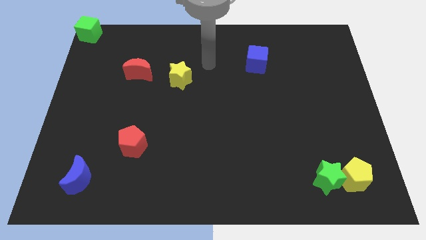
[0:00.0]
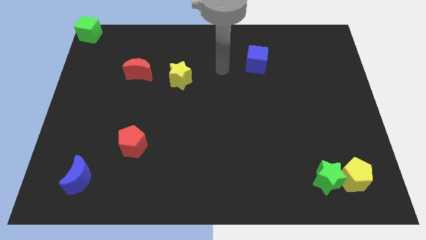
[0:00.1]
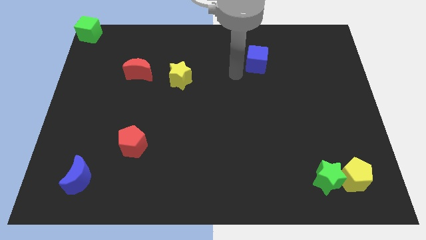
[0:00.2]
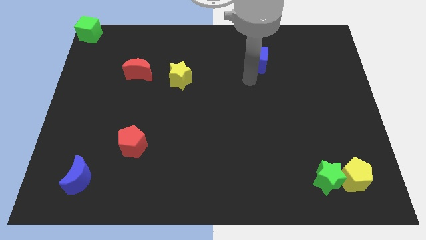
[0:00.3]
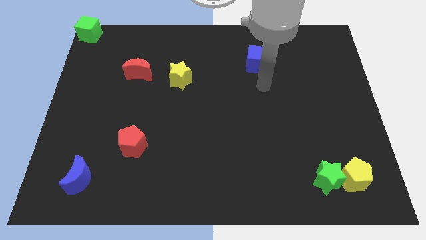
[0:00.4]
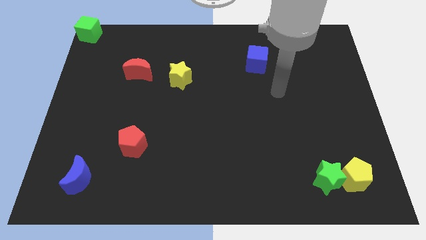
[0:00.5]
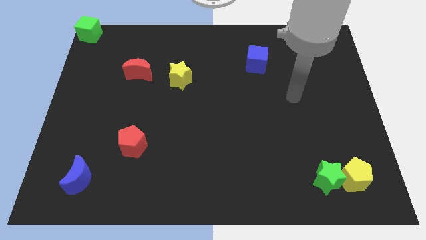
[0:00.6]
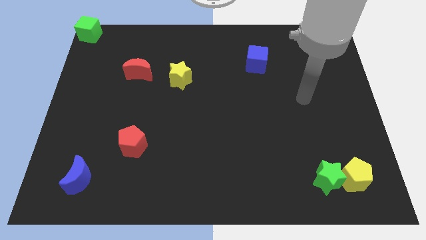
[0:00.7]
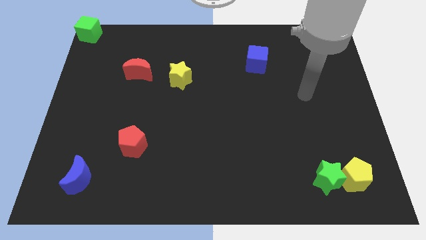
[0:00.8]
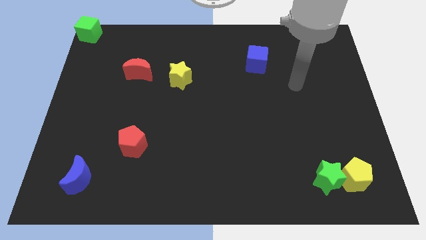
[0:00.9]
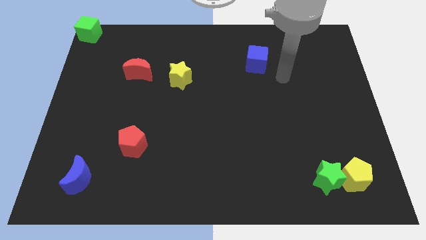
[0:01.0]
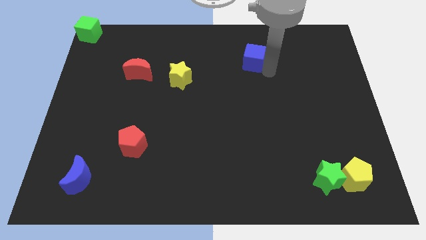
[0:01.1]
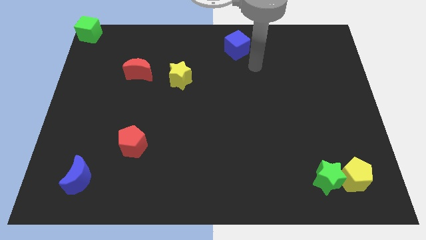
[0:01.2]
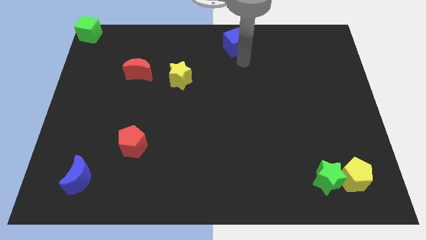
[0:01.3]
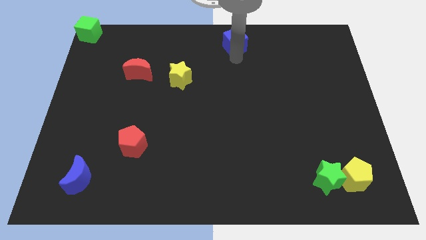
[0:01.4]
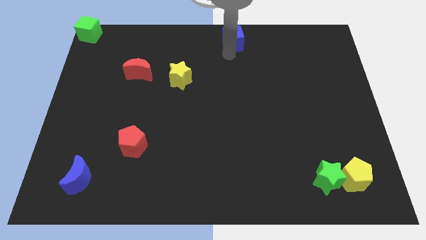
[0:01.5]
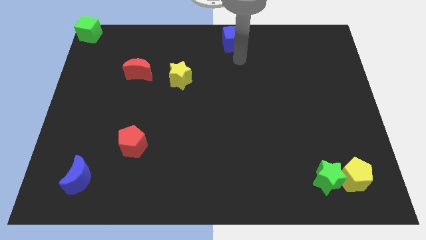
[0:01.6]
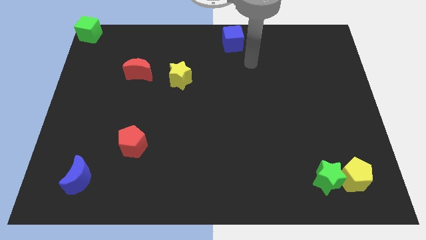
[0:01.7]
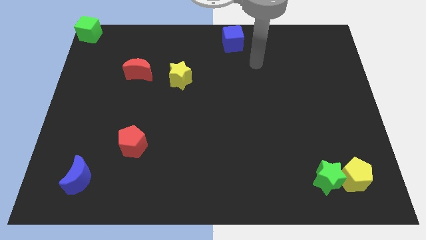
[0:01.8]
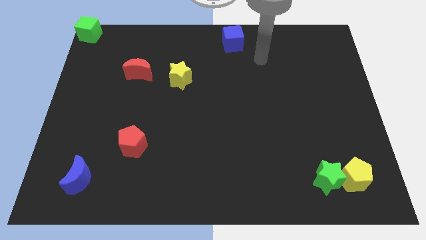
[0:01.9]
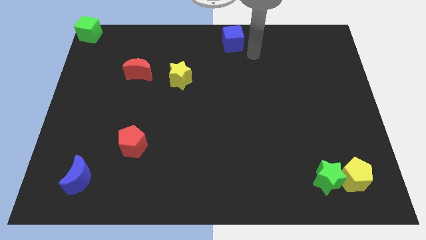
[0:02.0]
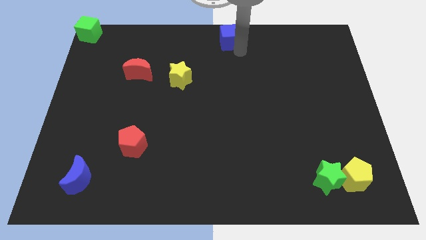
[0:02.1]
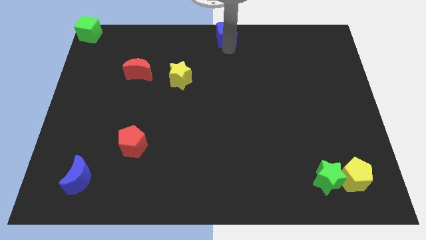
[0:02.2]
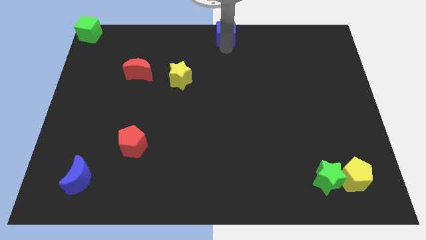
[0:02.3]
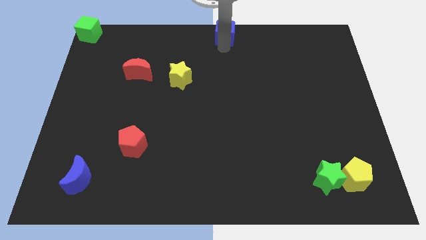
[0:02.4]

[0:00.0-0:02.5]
place the blue cube at the top center of the board

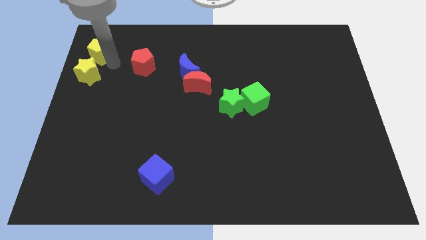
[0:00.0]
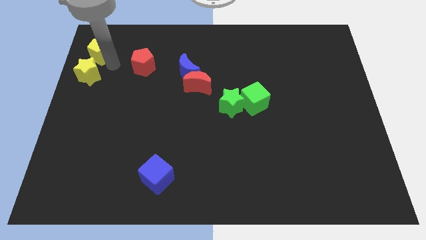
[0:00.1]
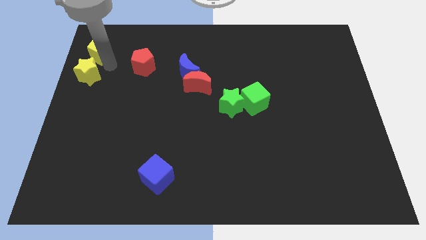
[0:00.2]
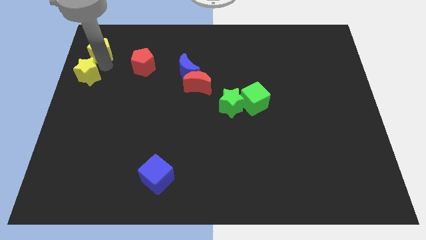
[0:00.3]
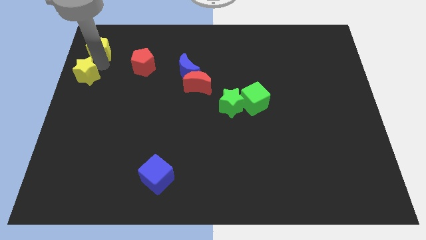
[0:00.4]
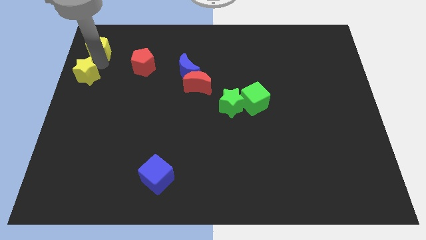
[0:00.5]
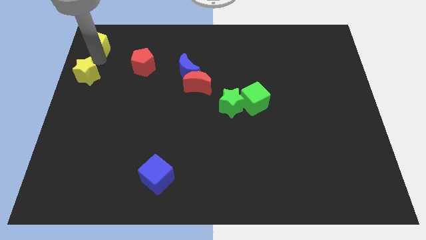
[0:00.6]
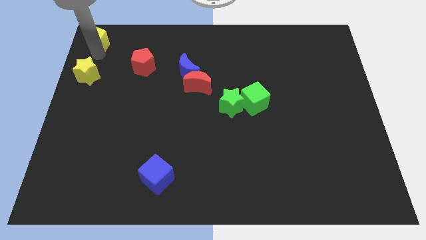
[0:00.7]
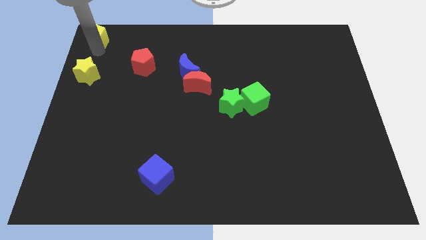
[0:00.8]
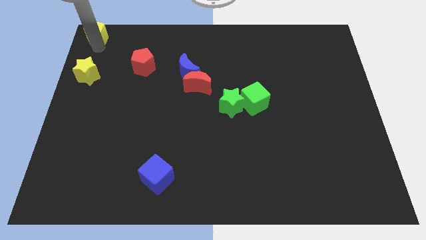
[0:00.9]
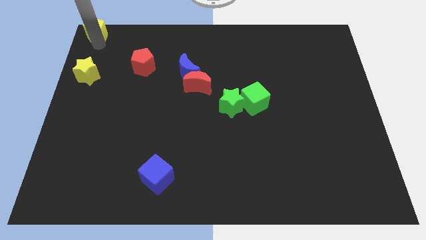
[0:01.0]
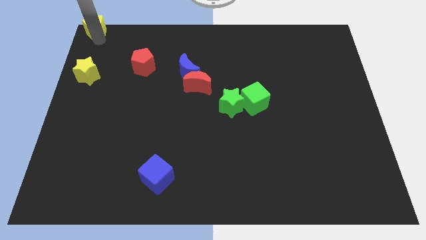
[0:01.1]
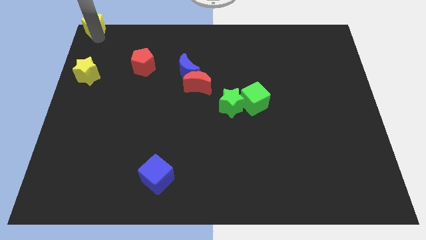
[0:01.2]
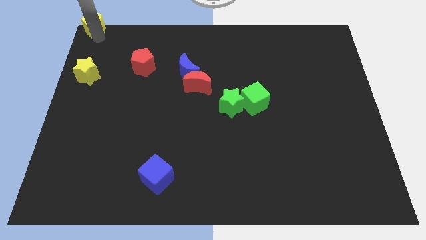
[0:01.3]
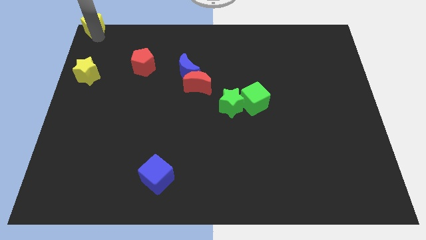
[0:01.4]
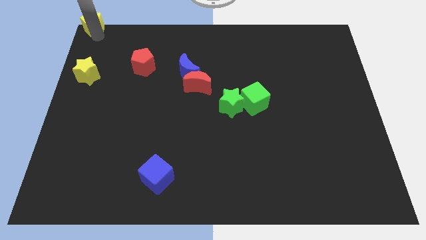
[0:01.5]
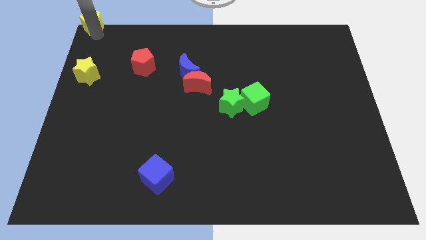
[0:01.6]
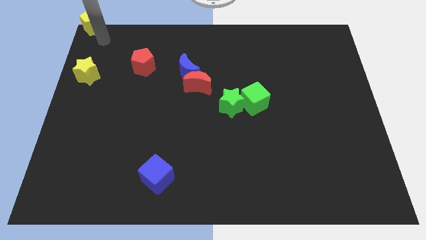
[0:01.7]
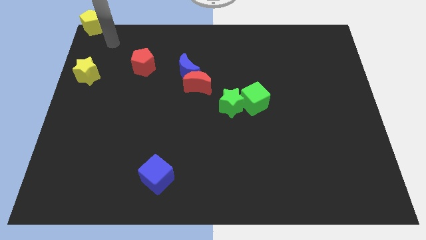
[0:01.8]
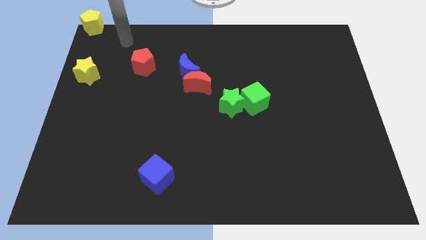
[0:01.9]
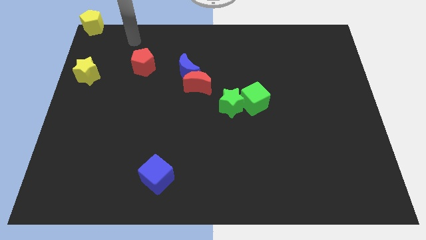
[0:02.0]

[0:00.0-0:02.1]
slide the yellow pentagon towards top left corner

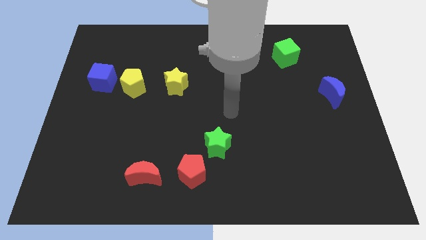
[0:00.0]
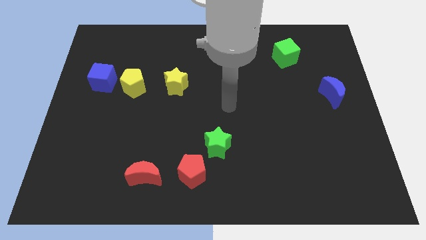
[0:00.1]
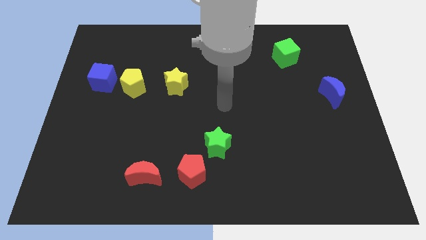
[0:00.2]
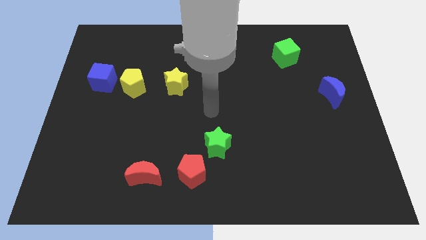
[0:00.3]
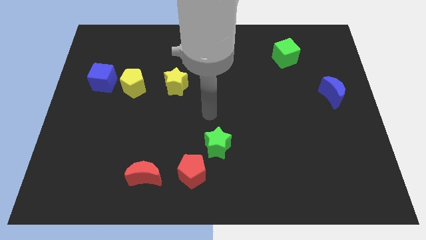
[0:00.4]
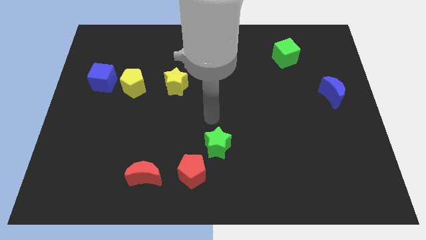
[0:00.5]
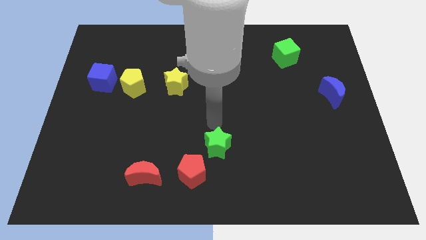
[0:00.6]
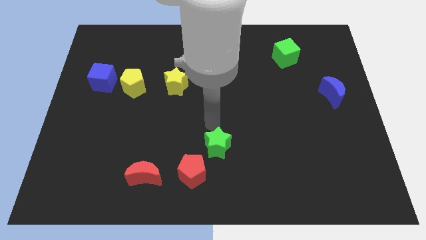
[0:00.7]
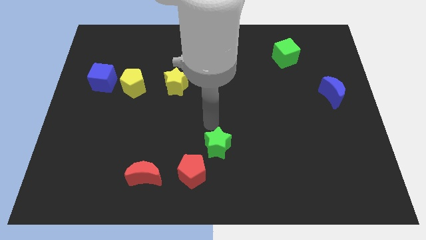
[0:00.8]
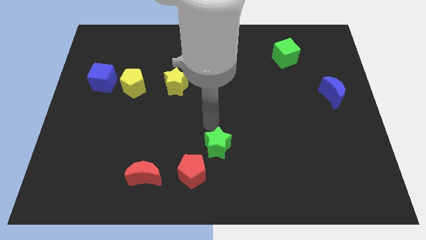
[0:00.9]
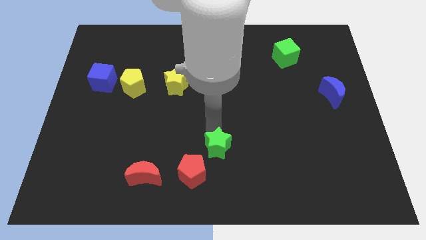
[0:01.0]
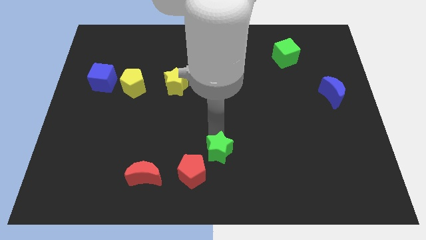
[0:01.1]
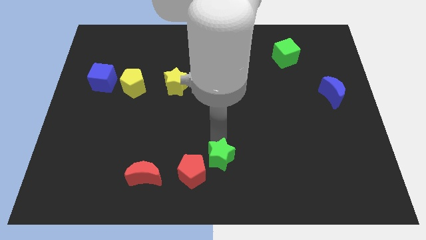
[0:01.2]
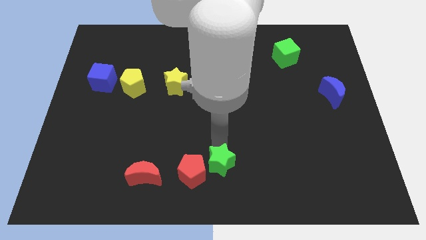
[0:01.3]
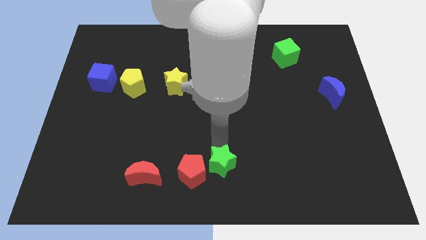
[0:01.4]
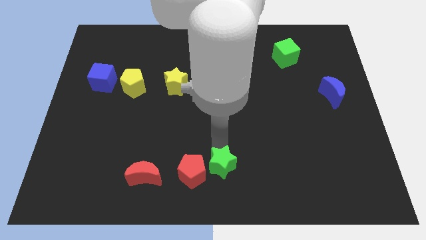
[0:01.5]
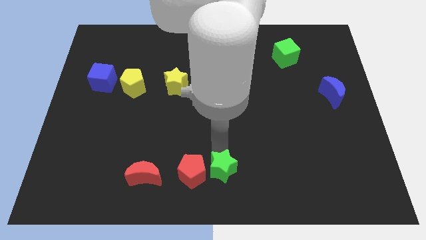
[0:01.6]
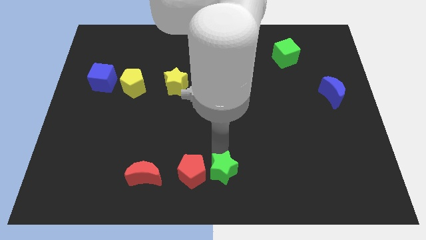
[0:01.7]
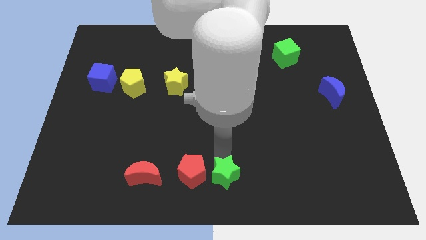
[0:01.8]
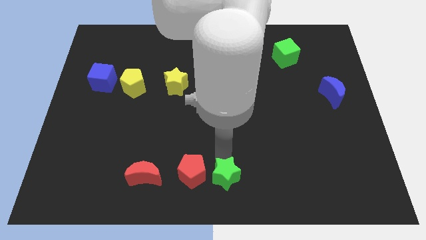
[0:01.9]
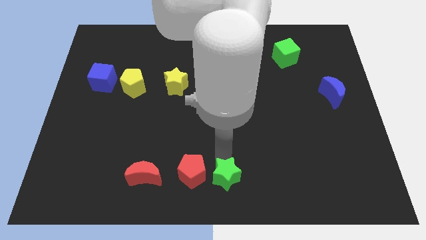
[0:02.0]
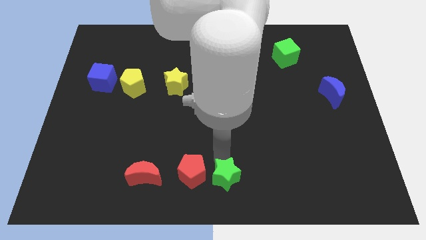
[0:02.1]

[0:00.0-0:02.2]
place green star to the right of the red pentagon

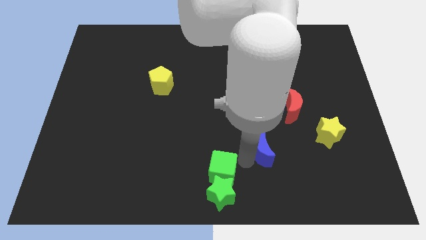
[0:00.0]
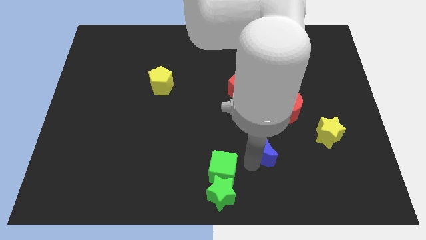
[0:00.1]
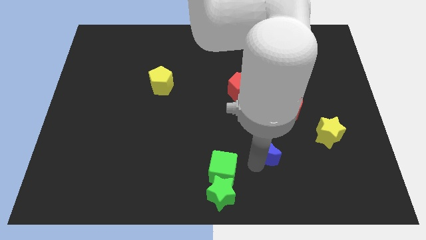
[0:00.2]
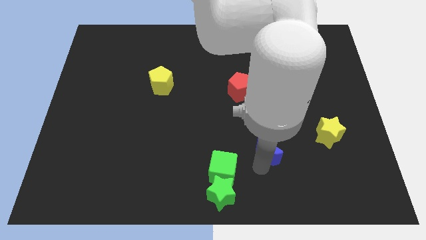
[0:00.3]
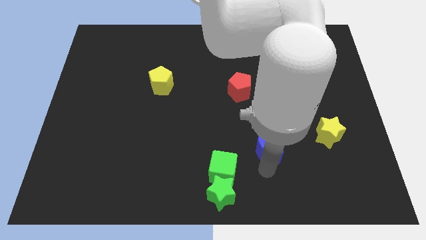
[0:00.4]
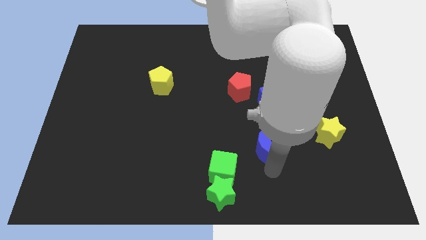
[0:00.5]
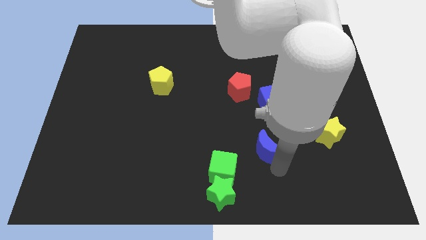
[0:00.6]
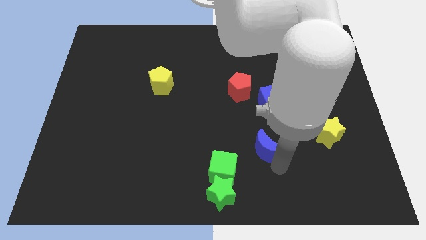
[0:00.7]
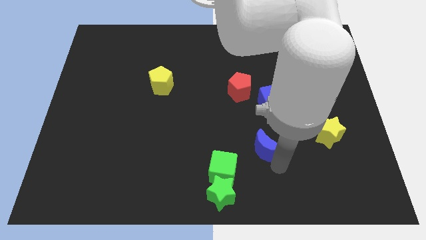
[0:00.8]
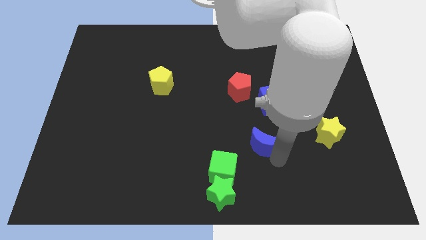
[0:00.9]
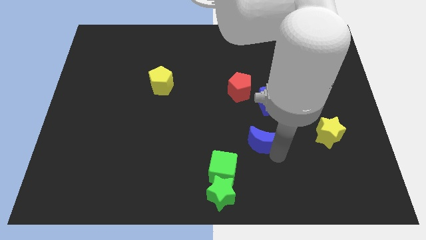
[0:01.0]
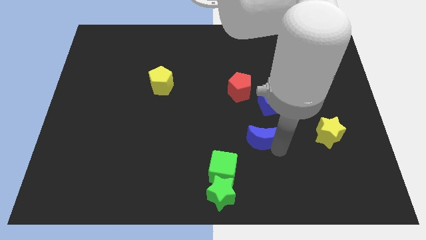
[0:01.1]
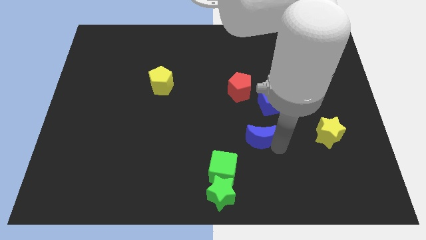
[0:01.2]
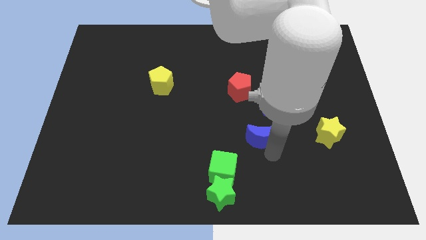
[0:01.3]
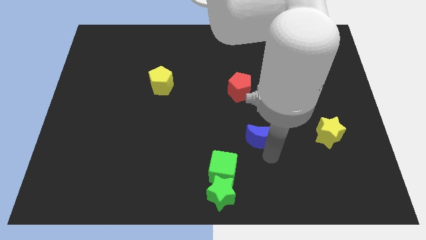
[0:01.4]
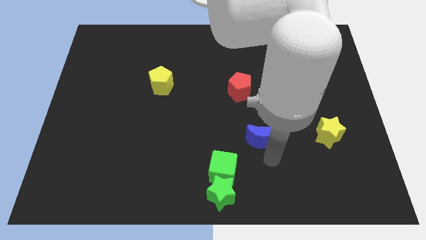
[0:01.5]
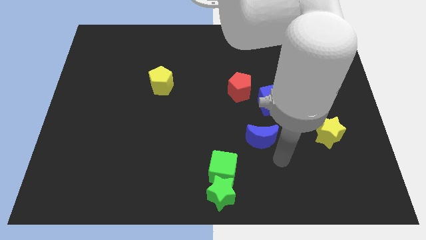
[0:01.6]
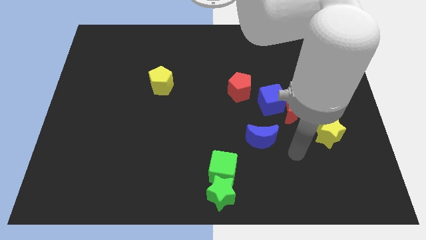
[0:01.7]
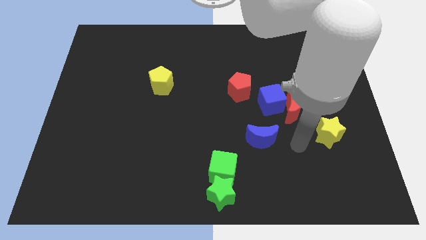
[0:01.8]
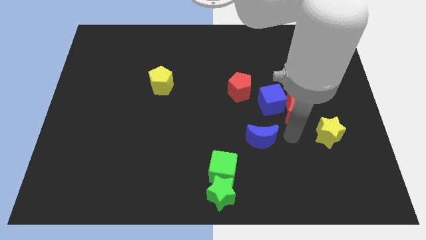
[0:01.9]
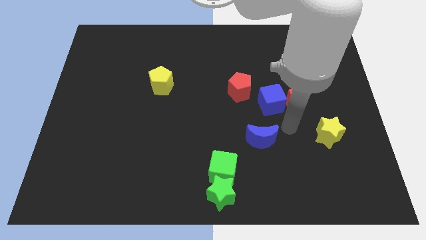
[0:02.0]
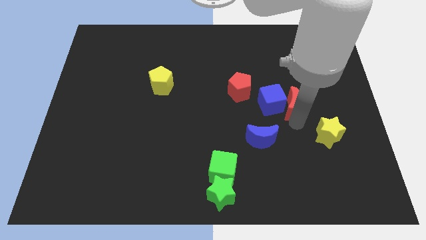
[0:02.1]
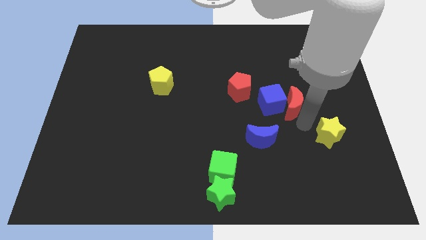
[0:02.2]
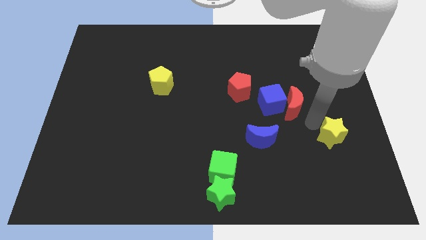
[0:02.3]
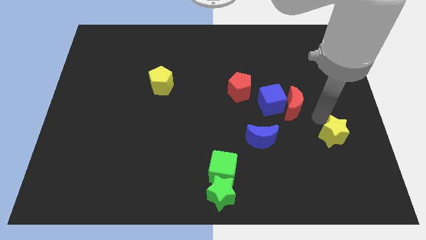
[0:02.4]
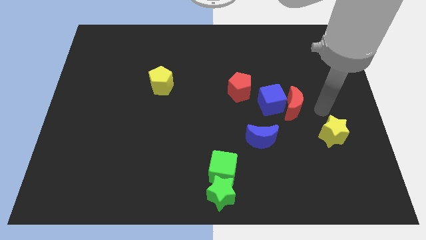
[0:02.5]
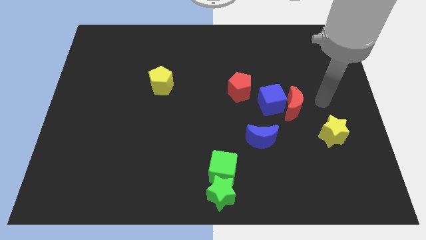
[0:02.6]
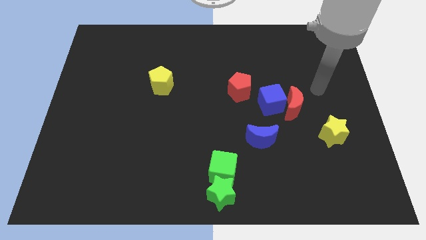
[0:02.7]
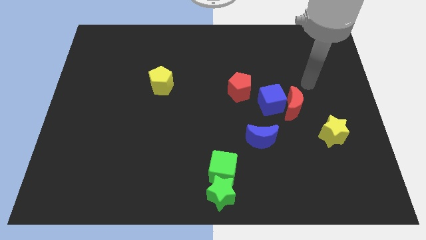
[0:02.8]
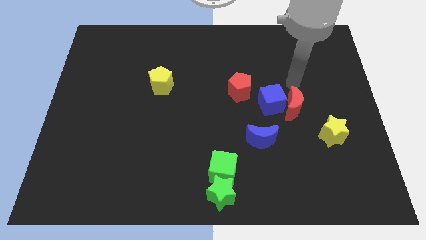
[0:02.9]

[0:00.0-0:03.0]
push blue crescent towards slightly upside
